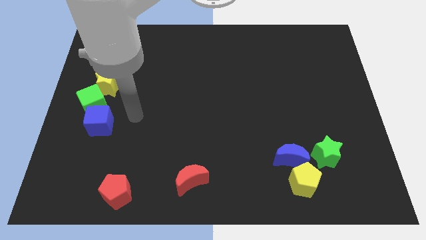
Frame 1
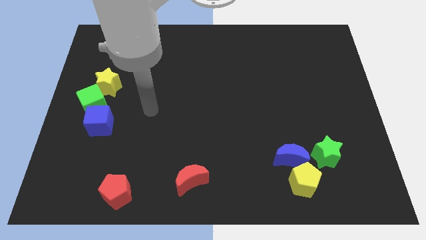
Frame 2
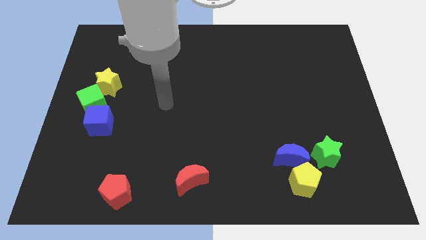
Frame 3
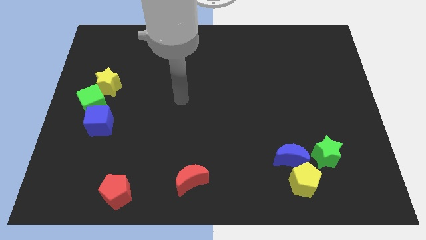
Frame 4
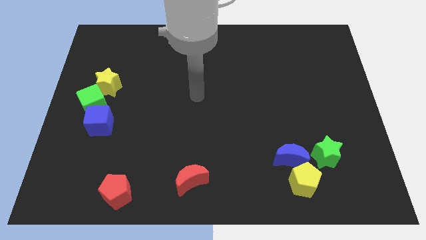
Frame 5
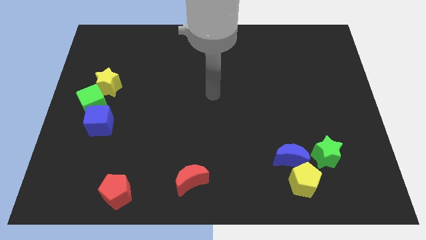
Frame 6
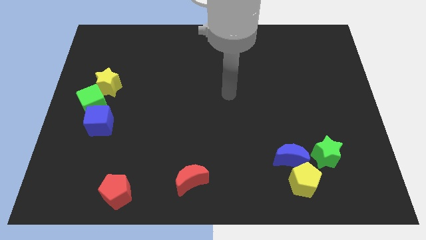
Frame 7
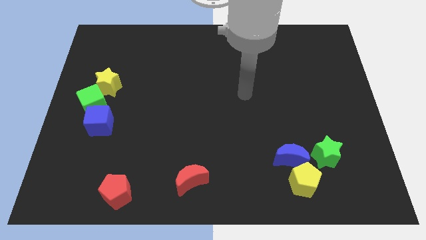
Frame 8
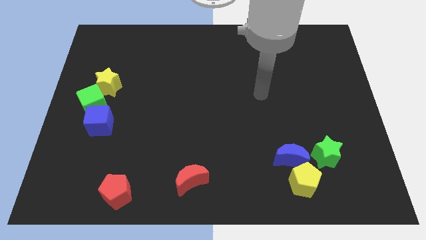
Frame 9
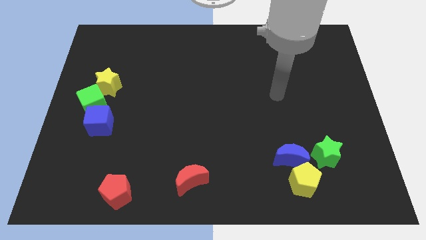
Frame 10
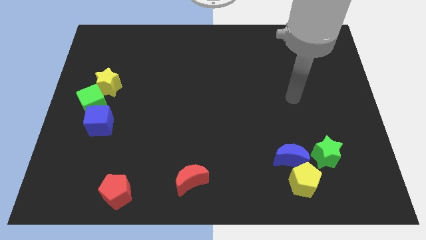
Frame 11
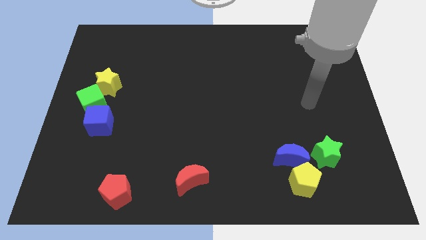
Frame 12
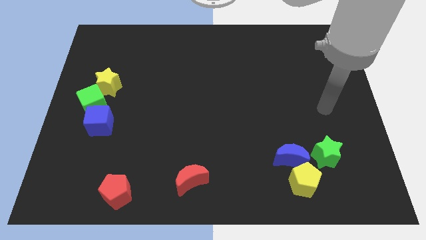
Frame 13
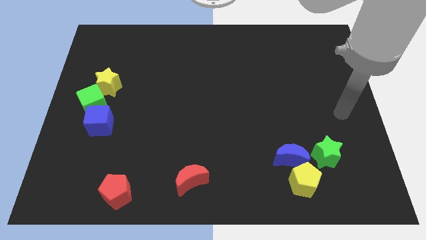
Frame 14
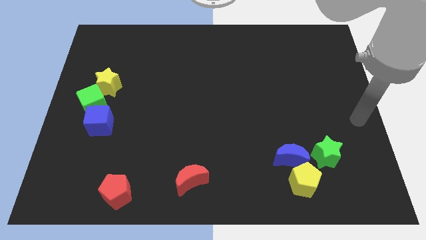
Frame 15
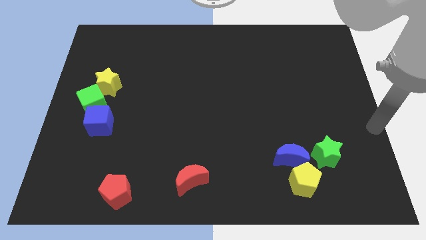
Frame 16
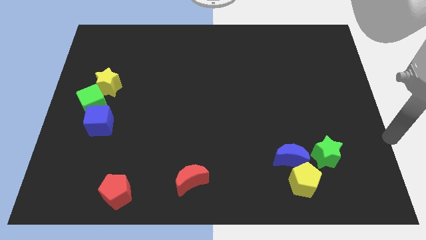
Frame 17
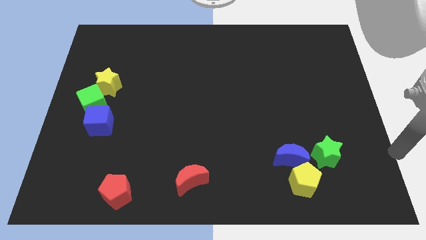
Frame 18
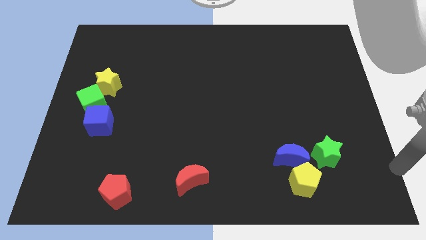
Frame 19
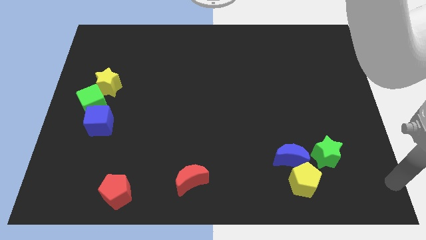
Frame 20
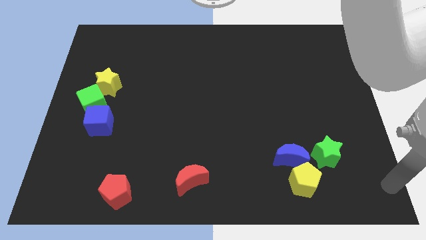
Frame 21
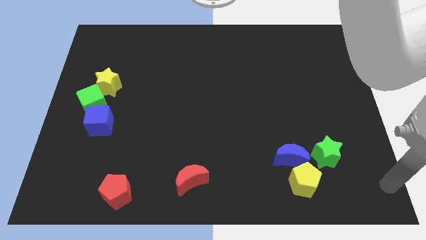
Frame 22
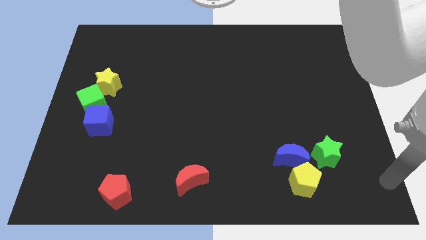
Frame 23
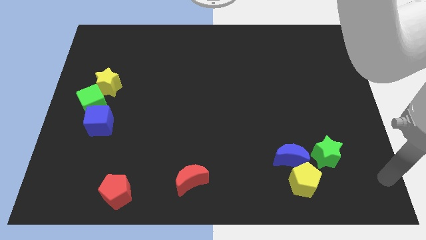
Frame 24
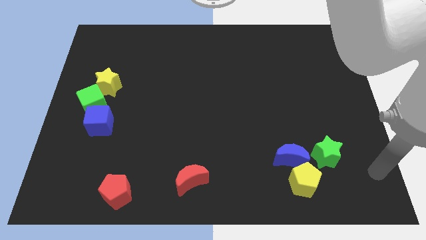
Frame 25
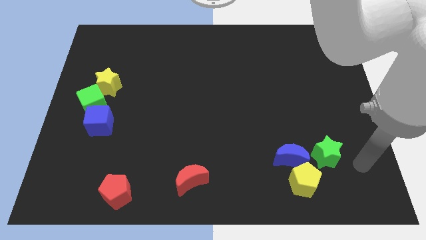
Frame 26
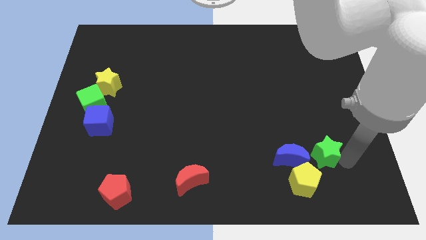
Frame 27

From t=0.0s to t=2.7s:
move the arm right to the green star

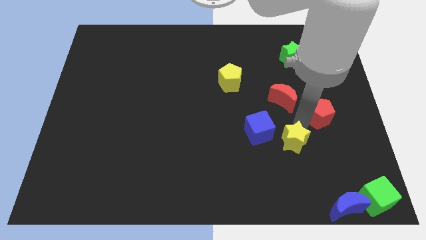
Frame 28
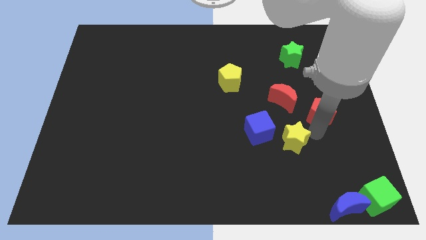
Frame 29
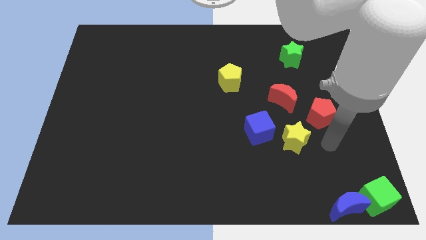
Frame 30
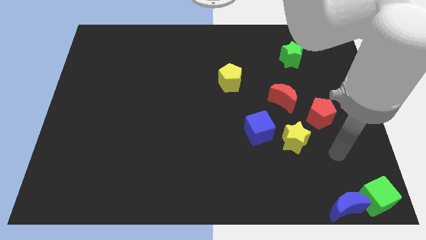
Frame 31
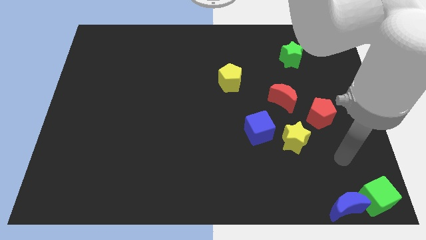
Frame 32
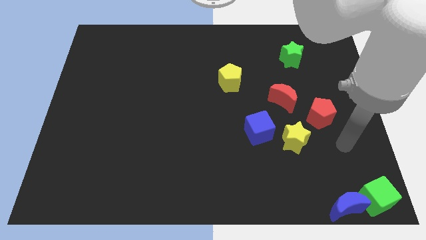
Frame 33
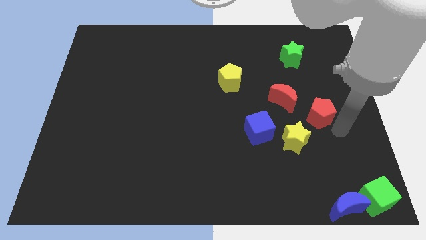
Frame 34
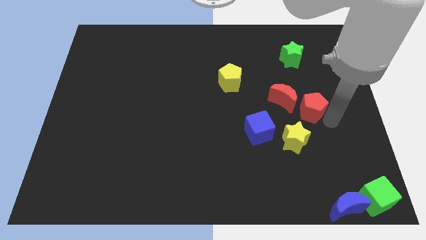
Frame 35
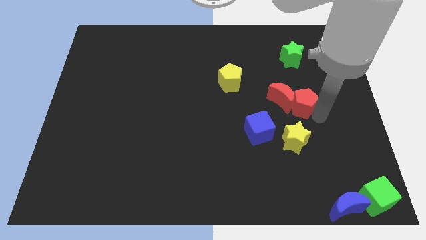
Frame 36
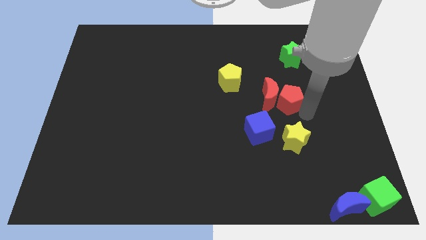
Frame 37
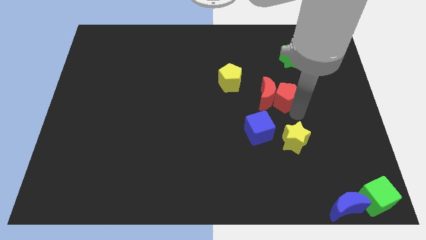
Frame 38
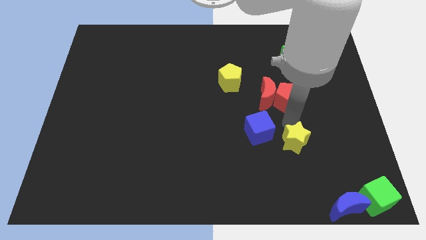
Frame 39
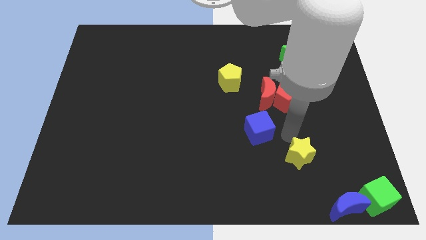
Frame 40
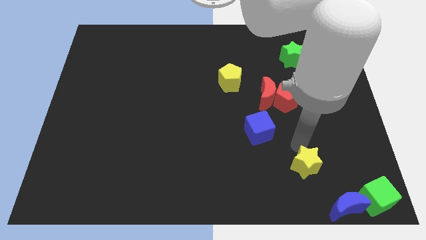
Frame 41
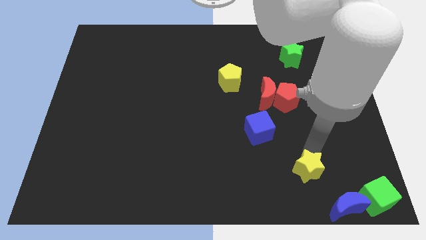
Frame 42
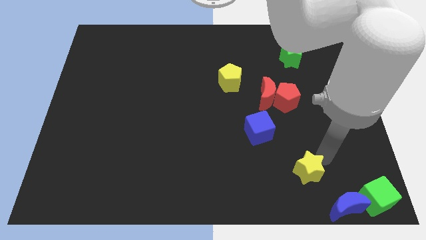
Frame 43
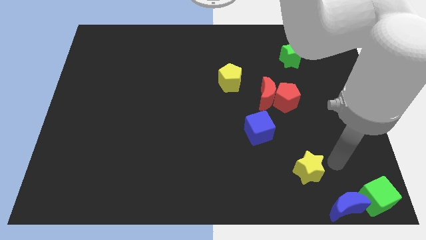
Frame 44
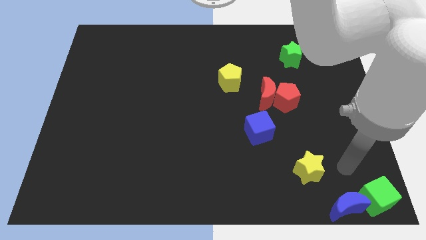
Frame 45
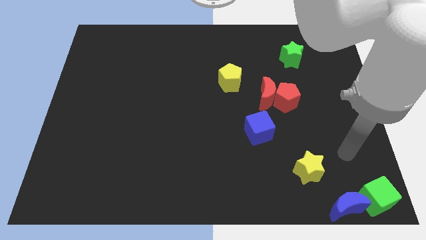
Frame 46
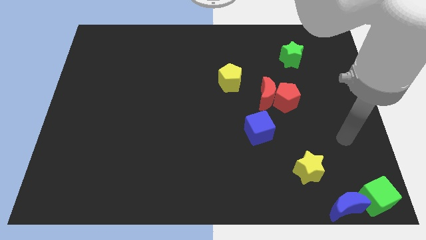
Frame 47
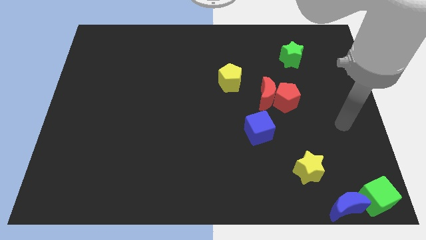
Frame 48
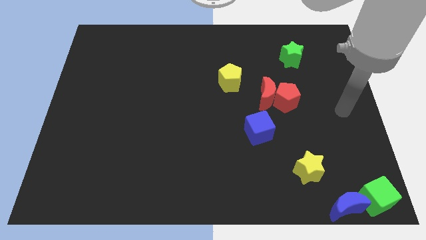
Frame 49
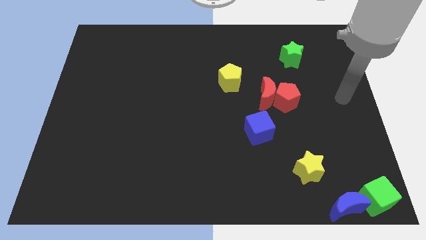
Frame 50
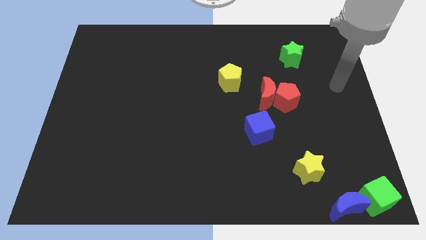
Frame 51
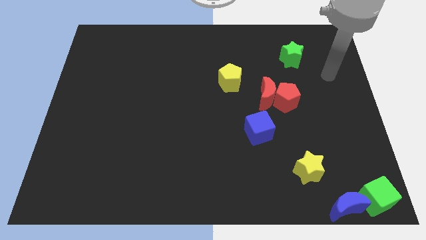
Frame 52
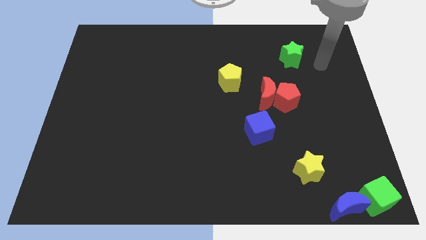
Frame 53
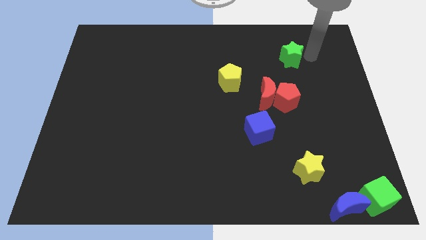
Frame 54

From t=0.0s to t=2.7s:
place the yellow star in between the blue cube and blue crescent

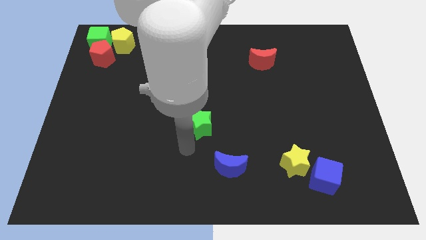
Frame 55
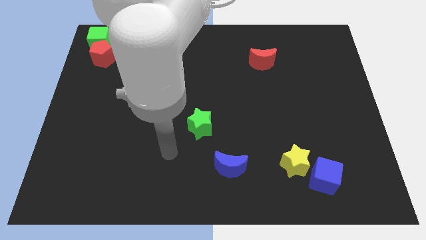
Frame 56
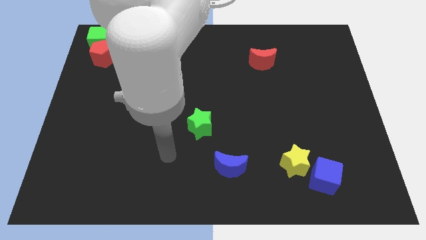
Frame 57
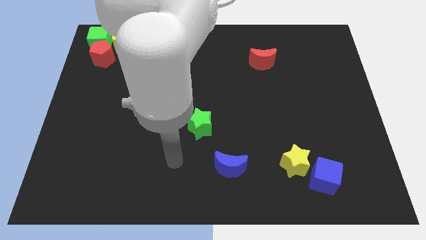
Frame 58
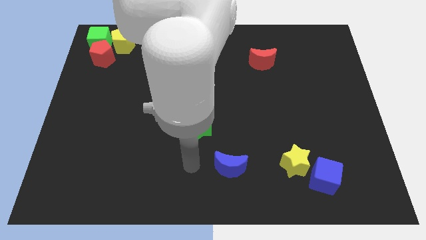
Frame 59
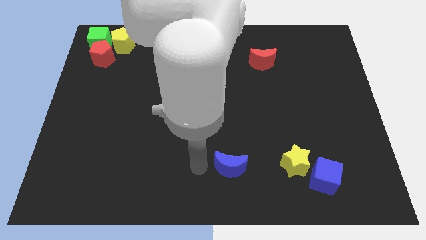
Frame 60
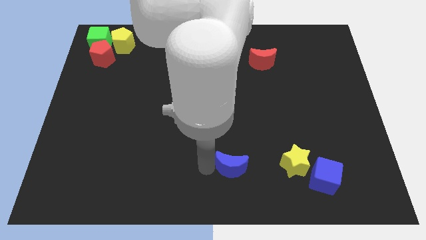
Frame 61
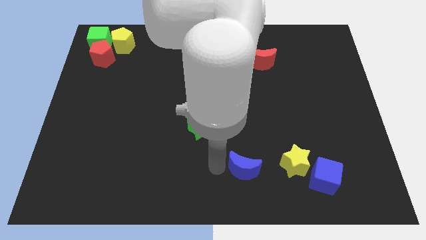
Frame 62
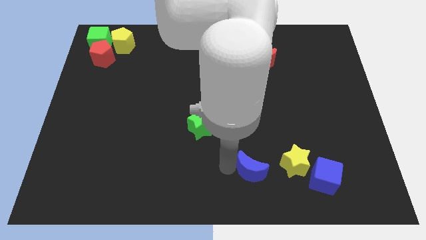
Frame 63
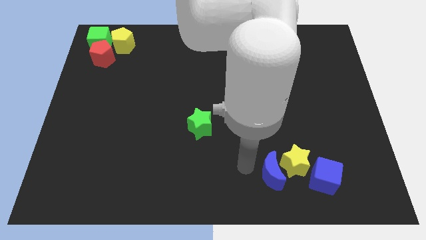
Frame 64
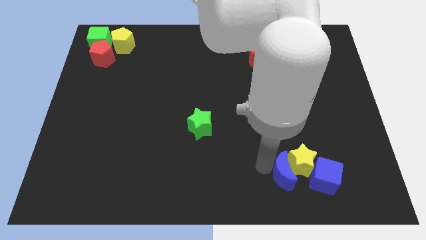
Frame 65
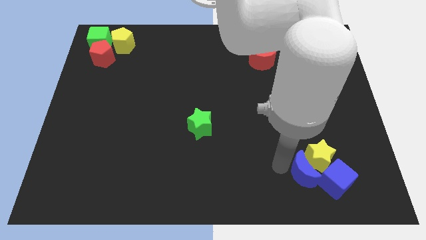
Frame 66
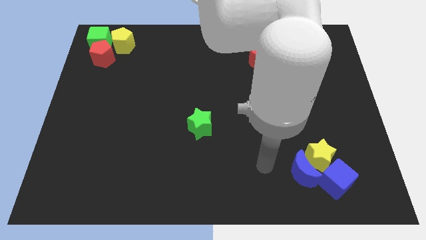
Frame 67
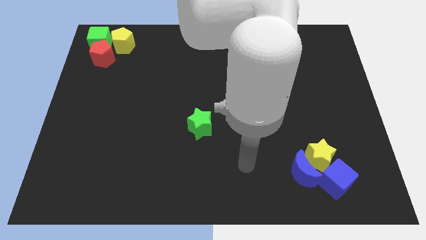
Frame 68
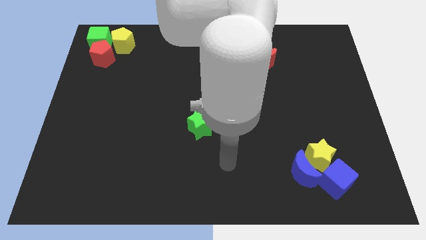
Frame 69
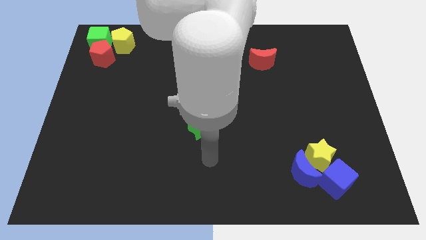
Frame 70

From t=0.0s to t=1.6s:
push the blue crescent into yellow star and blue cube

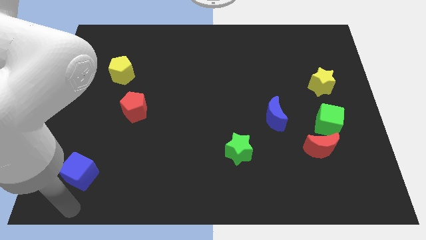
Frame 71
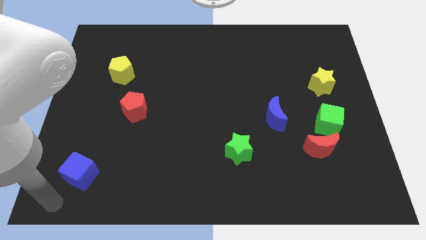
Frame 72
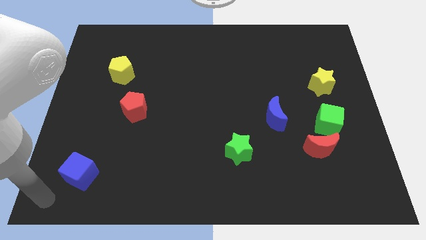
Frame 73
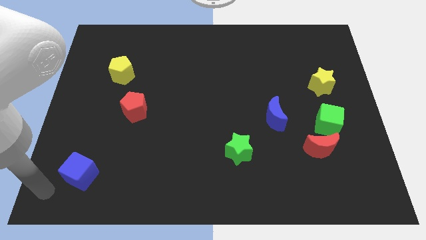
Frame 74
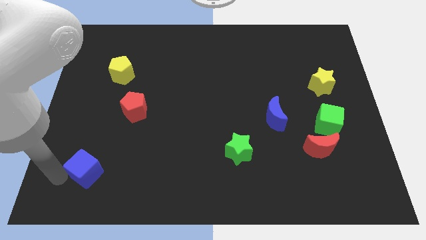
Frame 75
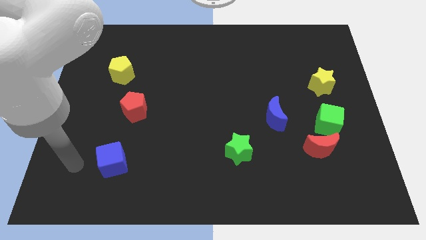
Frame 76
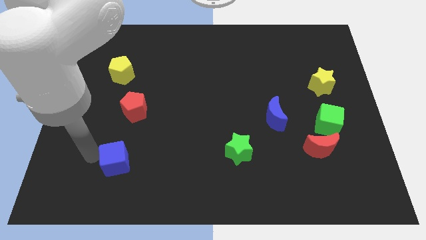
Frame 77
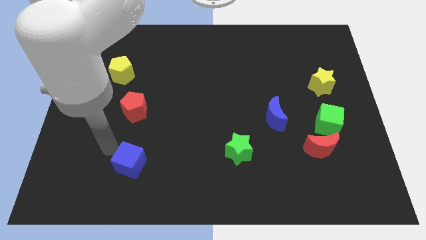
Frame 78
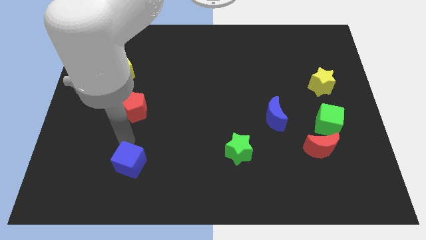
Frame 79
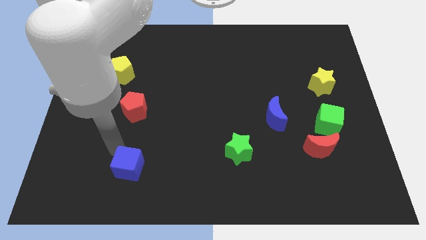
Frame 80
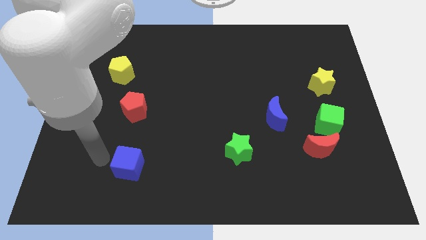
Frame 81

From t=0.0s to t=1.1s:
move the blue cube below the red pentagon

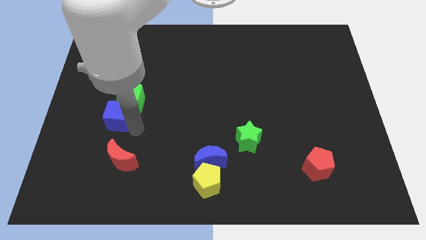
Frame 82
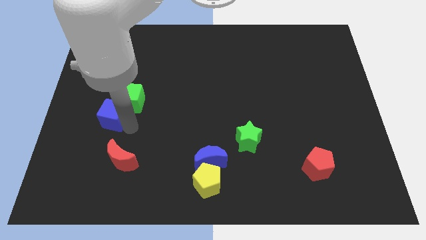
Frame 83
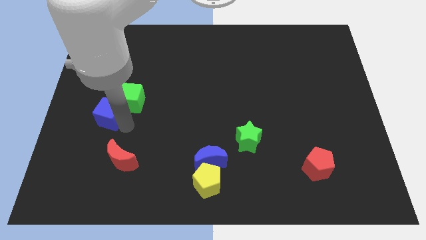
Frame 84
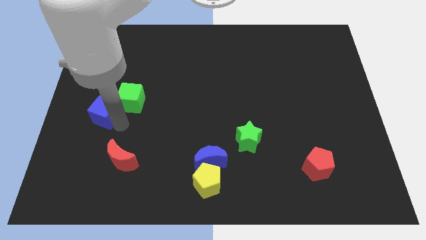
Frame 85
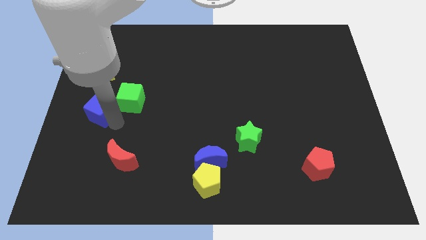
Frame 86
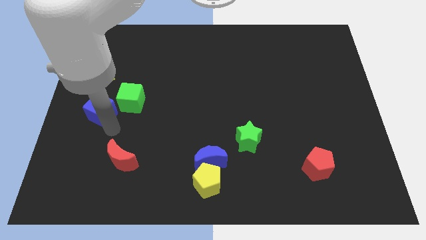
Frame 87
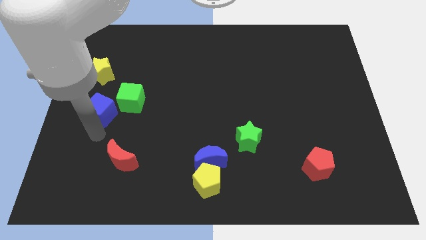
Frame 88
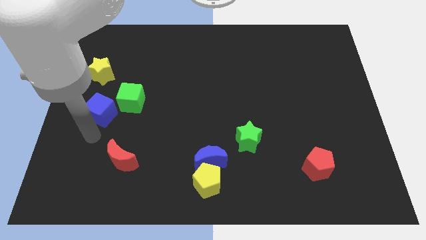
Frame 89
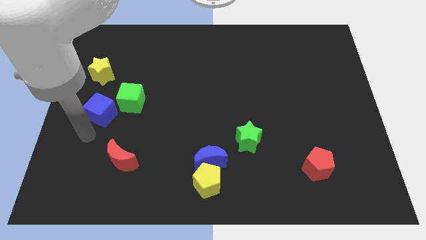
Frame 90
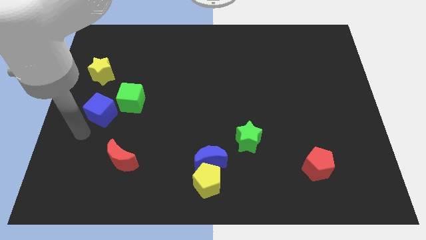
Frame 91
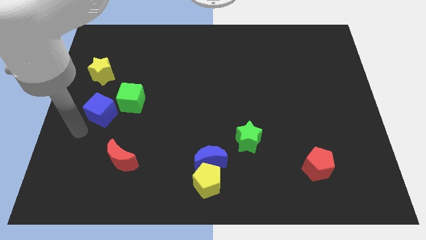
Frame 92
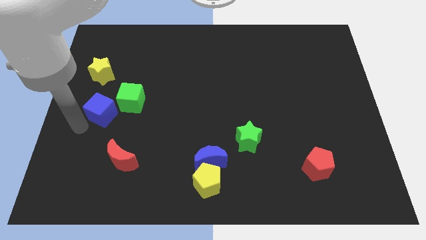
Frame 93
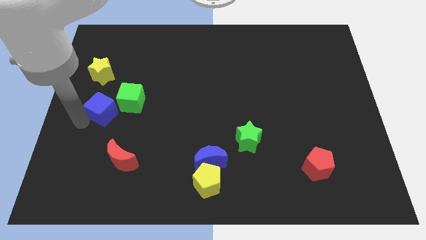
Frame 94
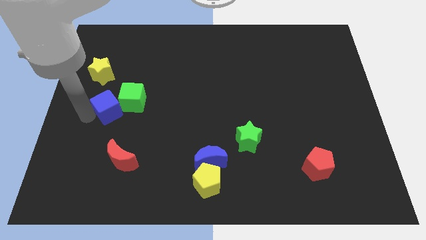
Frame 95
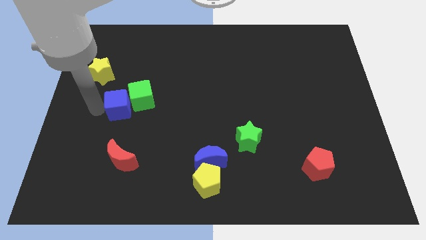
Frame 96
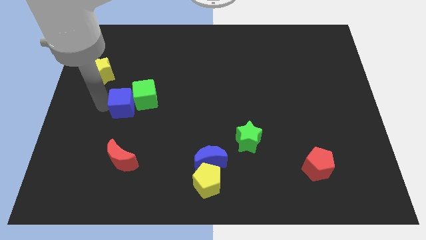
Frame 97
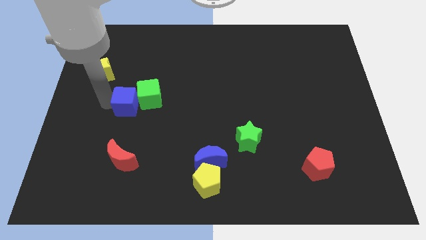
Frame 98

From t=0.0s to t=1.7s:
push the blue cube into the green cube
